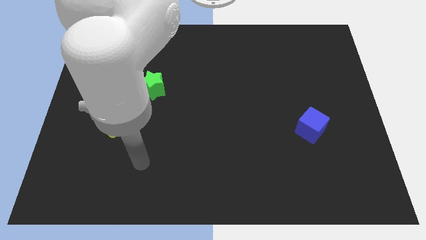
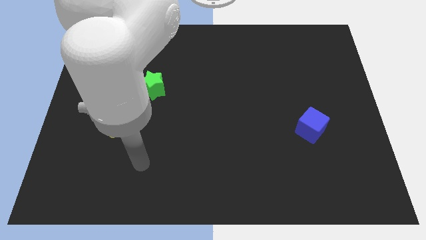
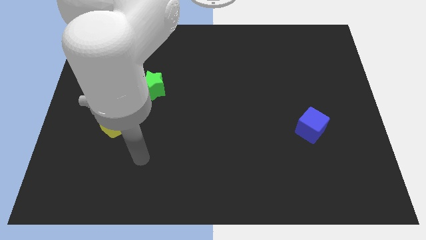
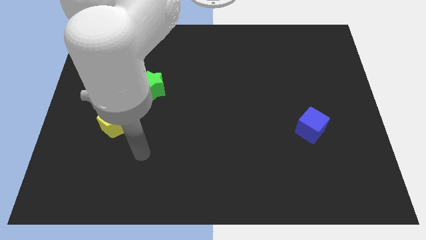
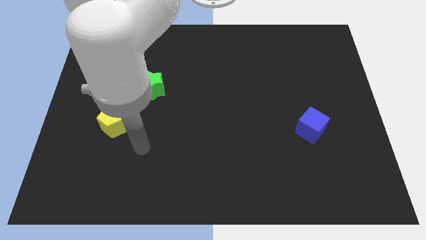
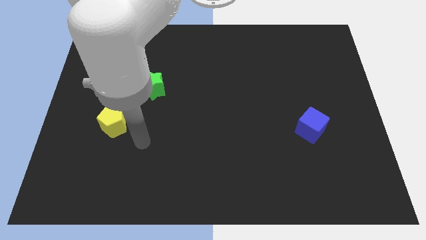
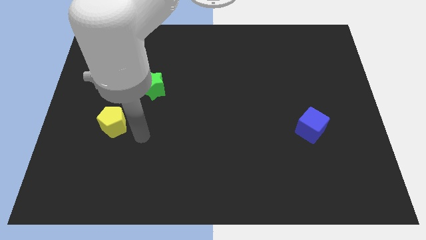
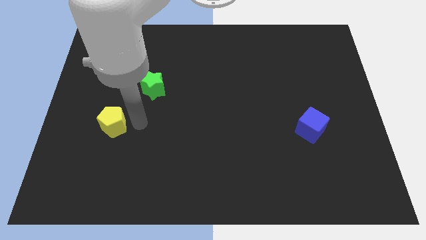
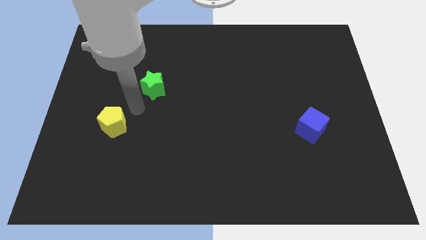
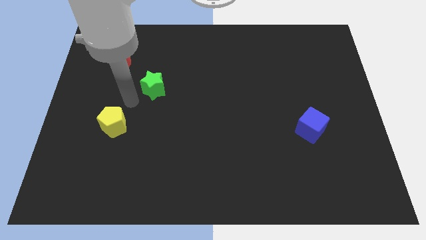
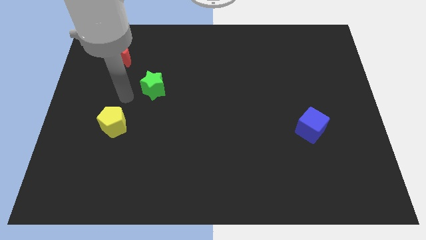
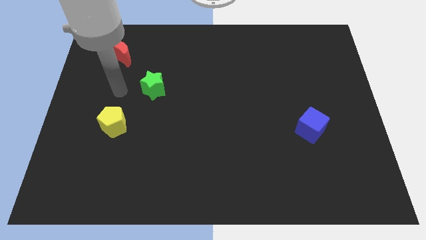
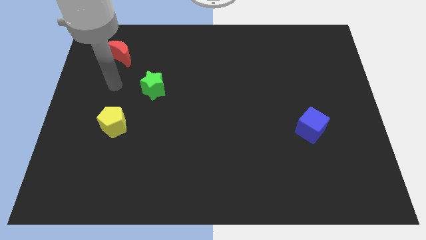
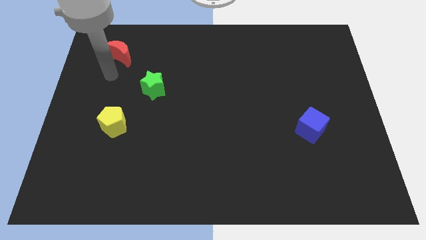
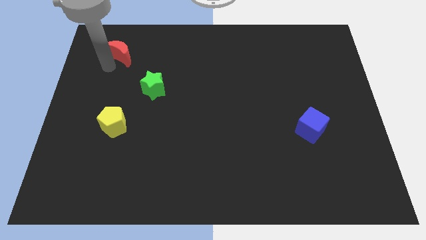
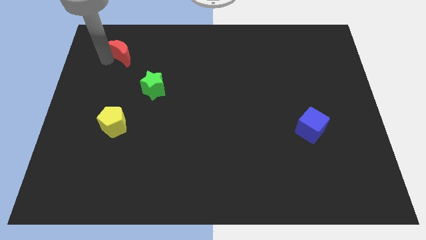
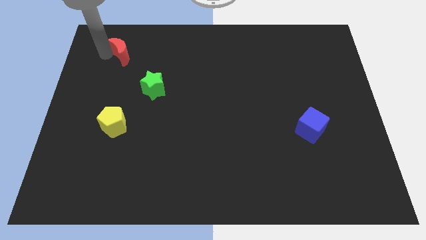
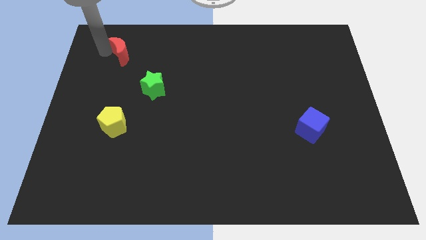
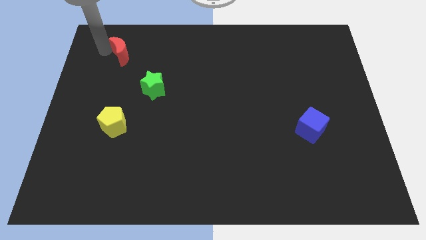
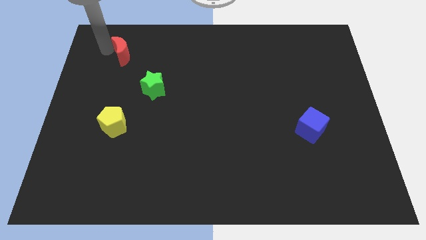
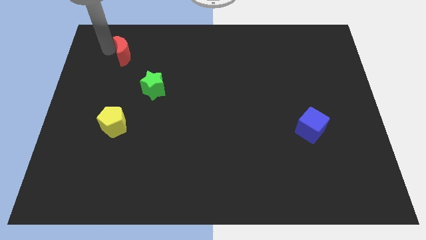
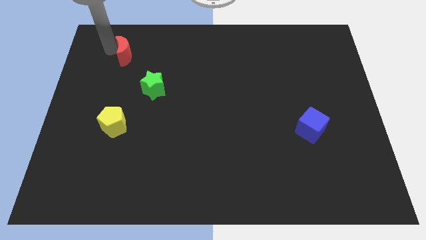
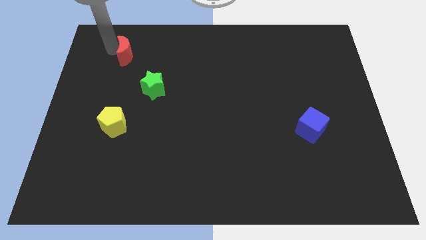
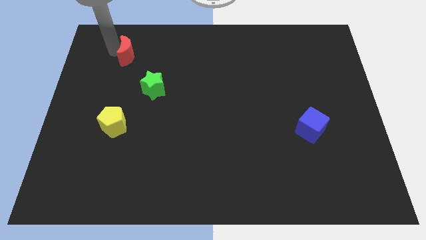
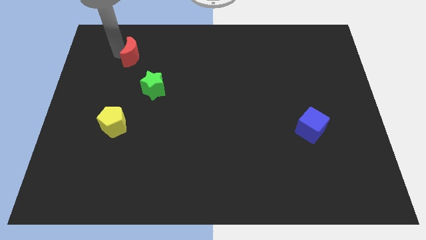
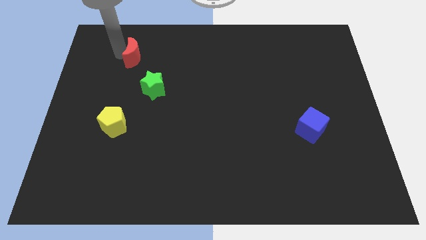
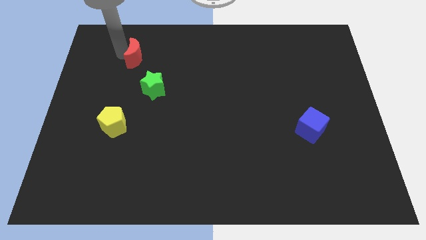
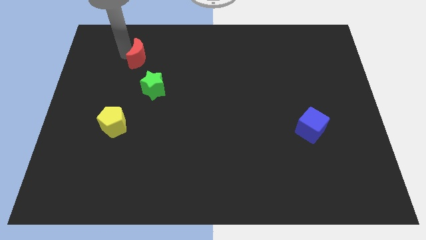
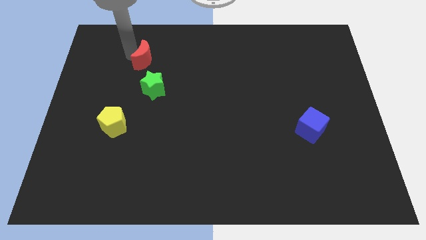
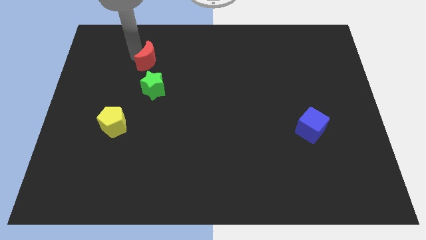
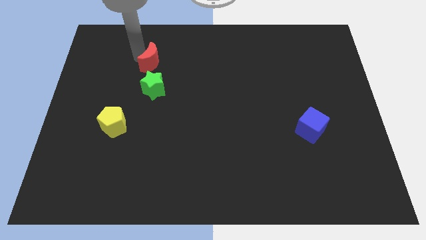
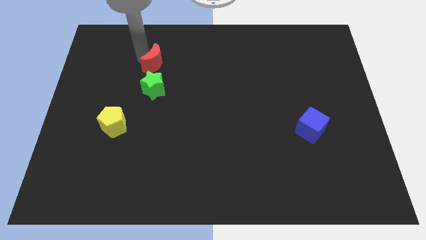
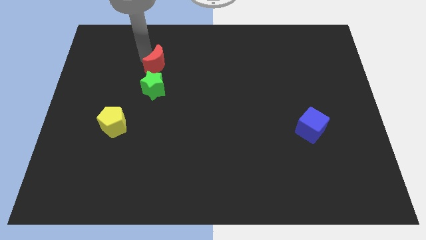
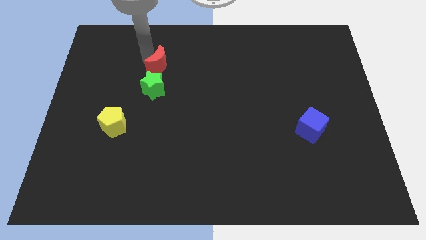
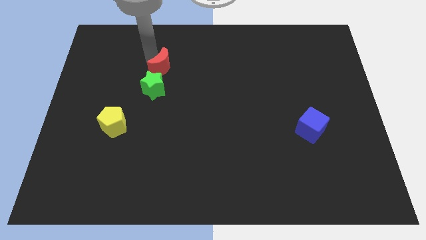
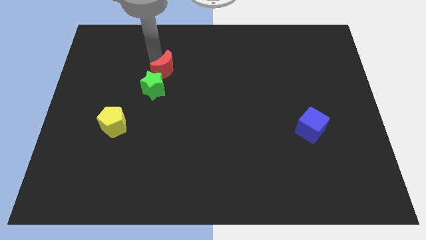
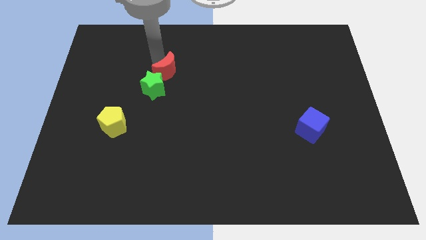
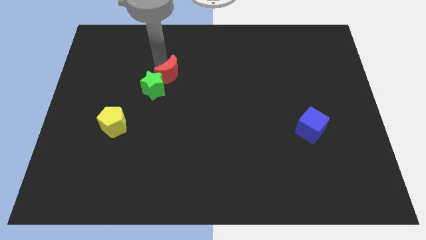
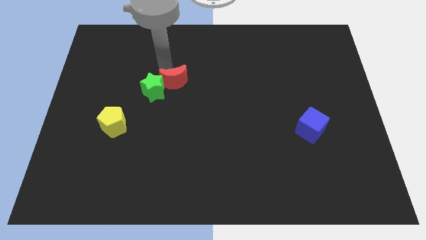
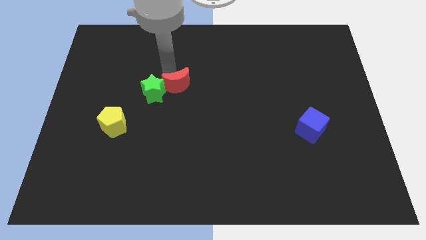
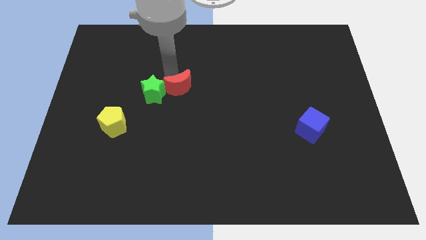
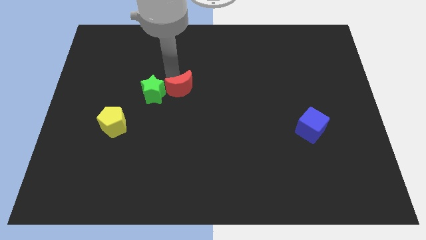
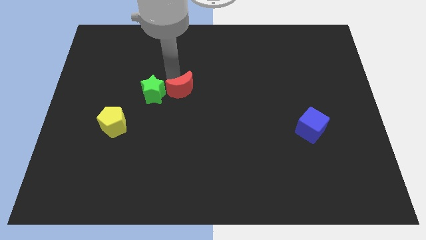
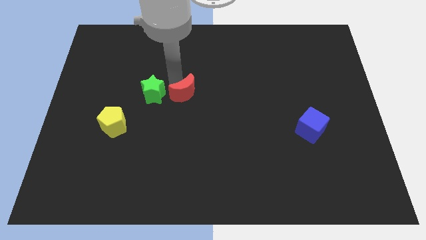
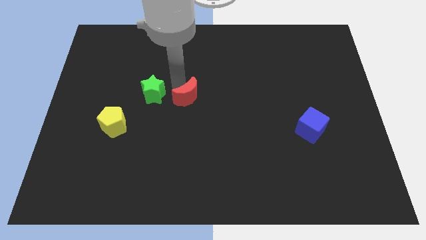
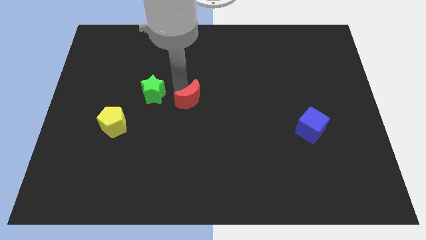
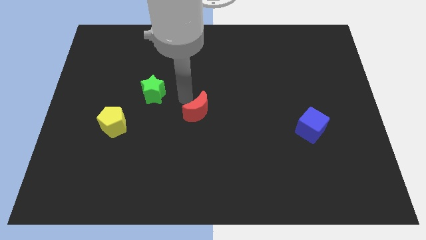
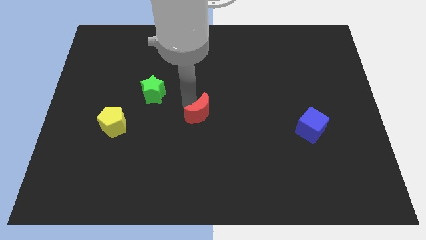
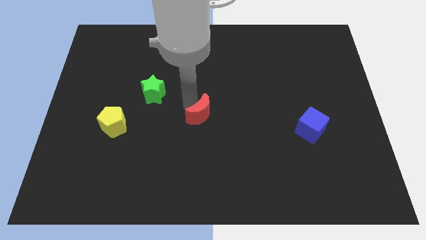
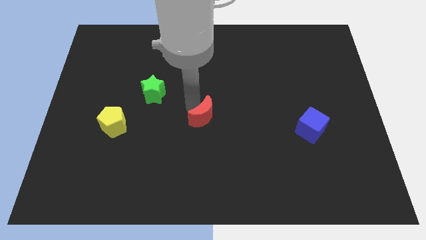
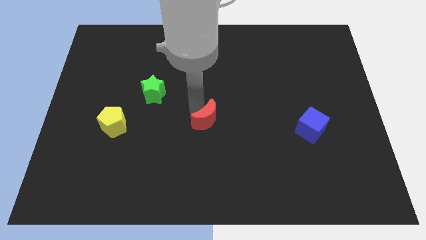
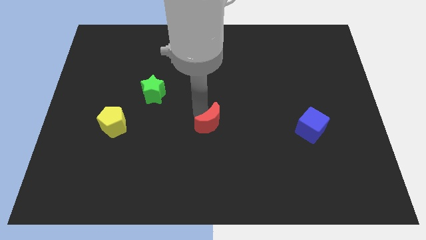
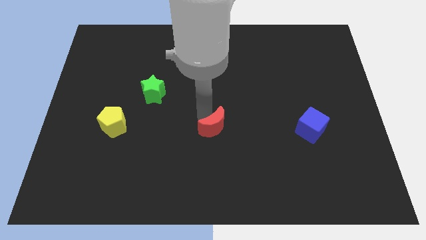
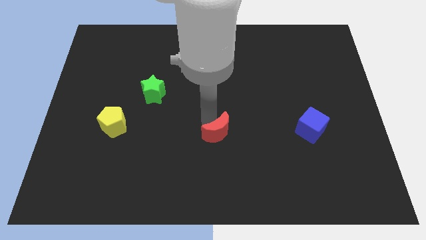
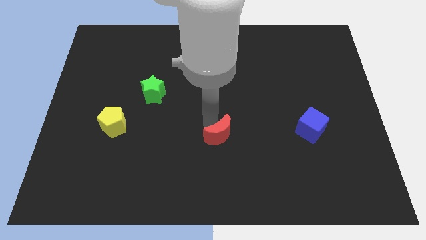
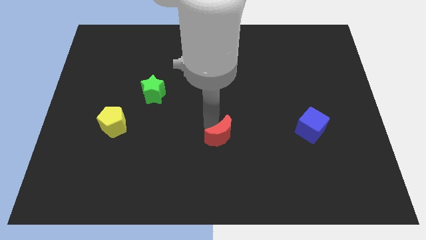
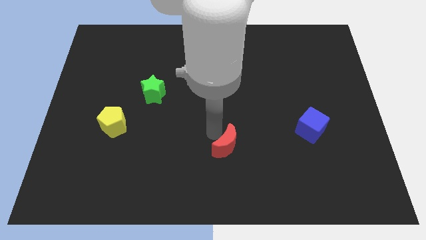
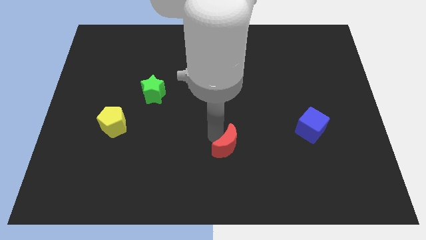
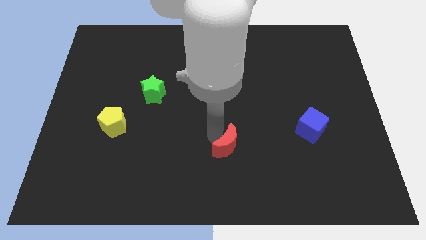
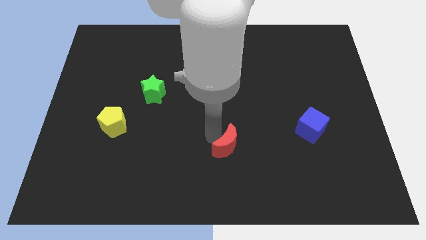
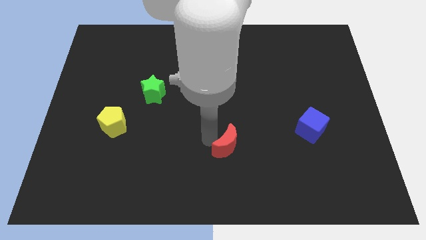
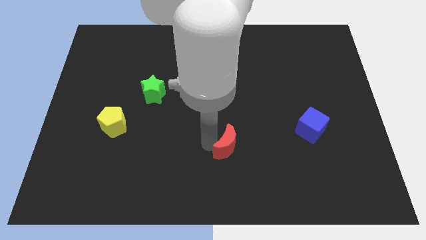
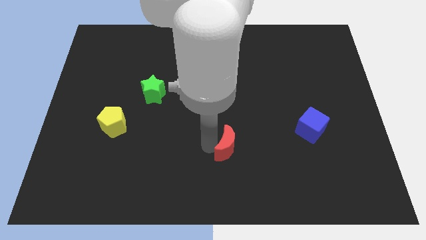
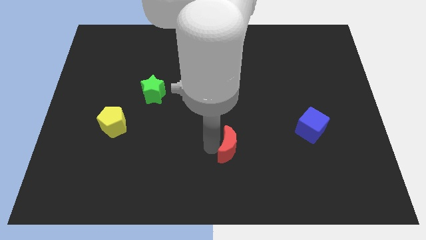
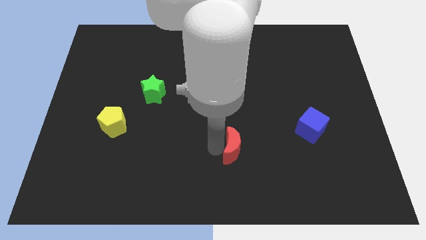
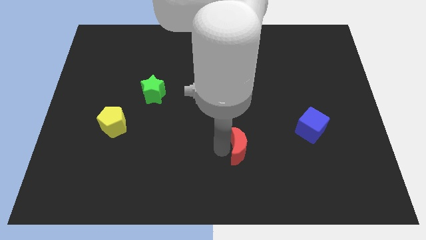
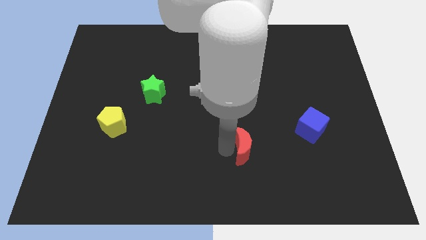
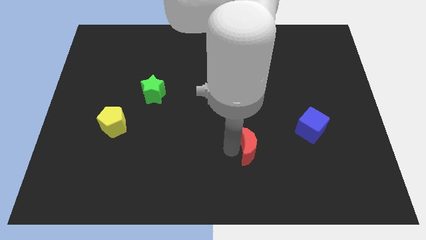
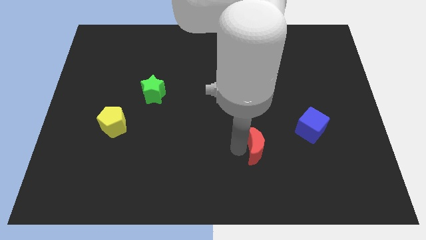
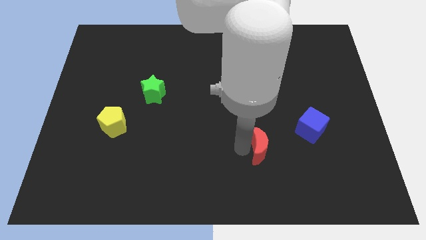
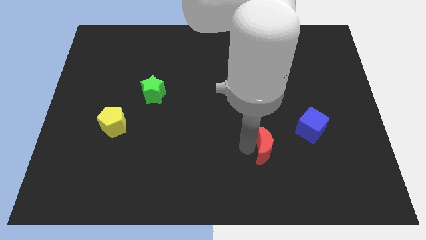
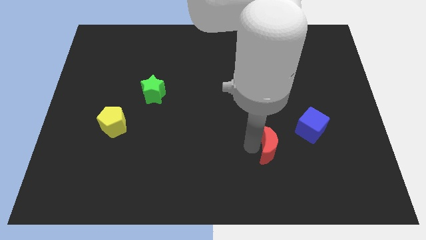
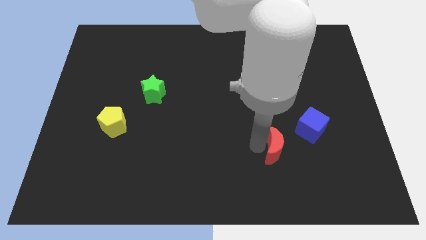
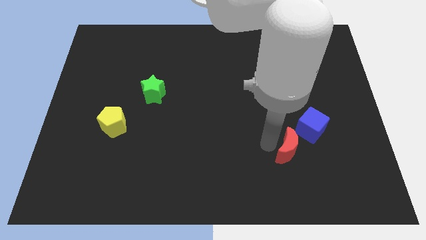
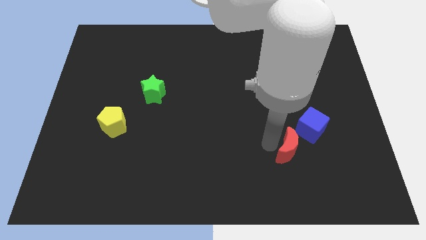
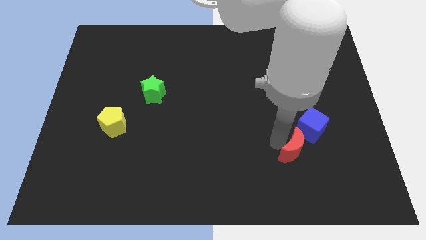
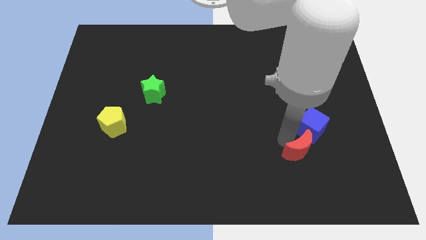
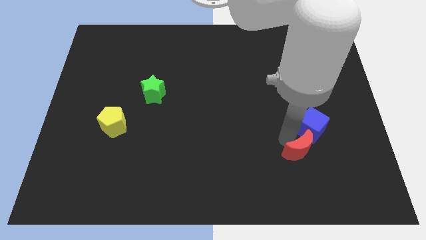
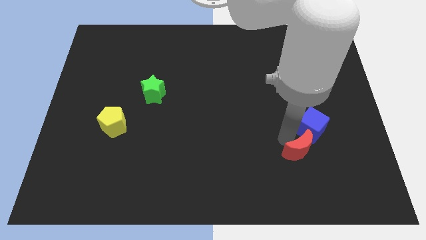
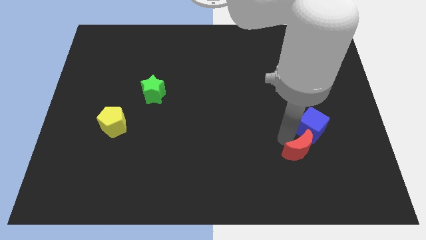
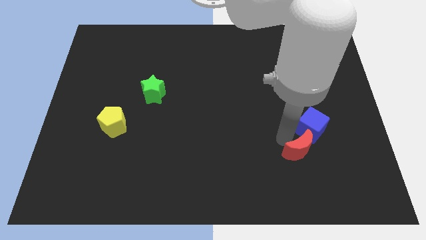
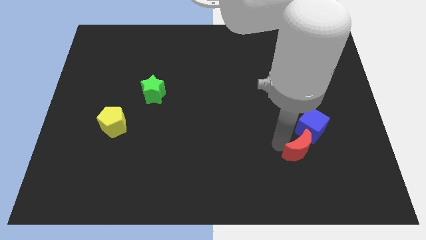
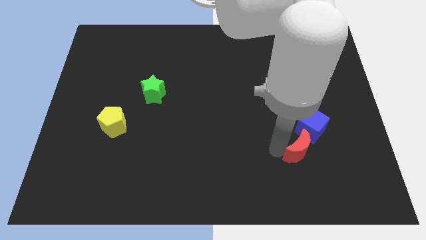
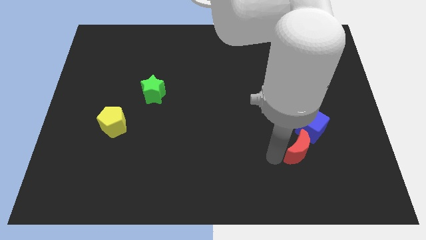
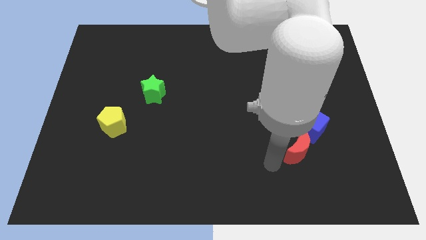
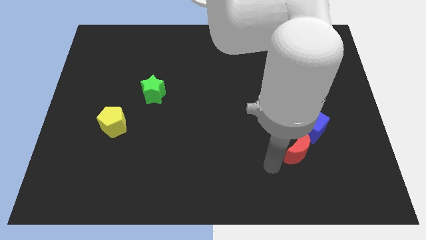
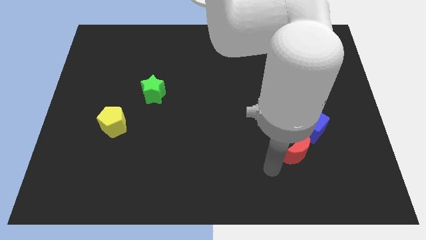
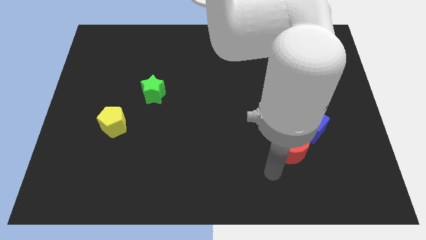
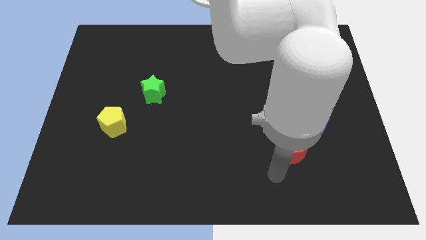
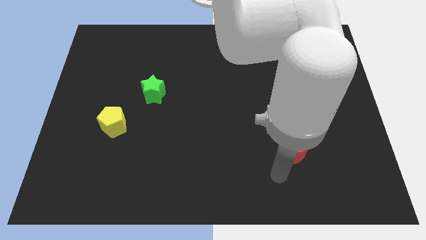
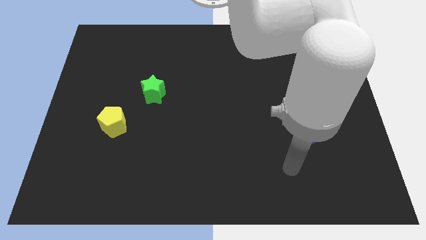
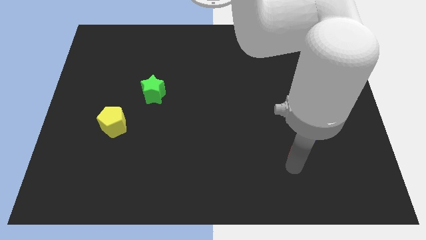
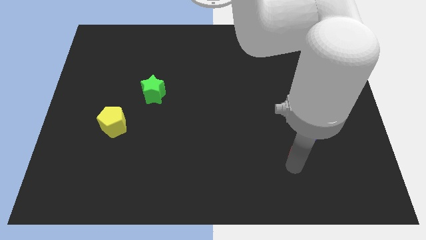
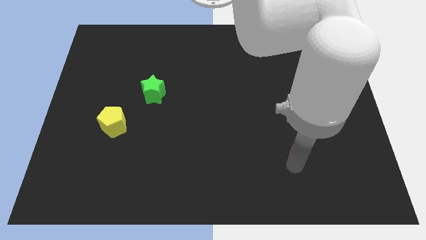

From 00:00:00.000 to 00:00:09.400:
slide the red block close to the blue cube
